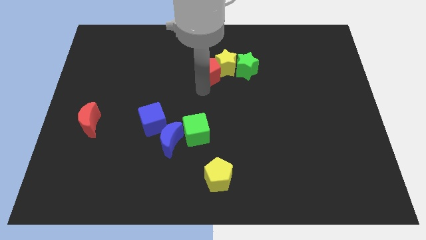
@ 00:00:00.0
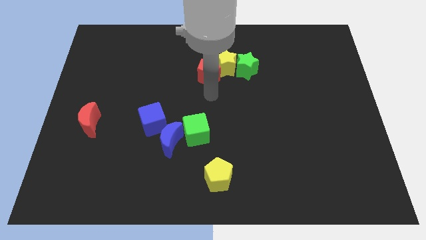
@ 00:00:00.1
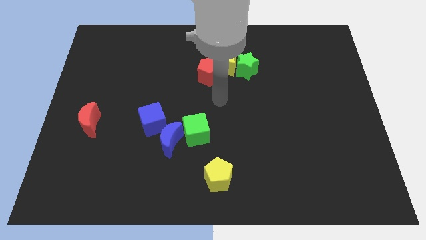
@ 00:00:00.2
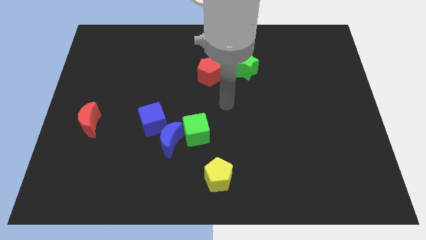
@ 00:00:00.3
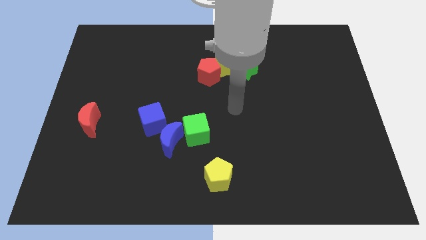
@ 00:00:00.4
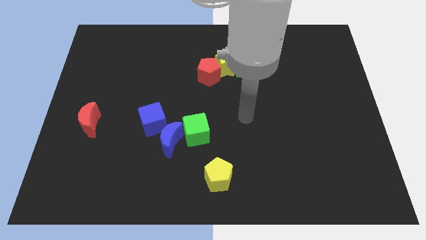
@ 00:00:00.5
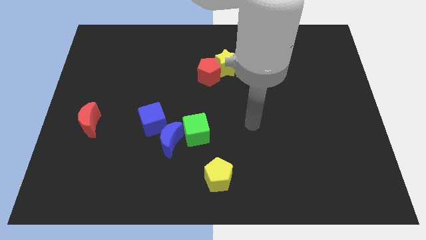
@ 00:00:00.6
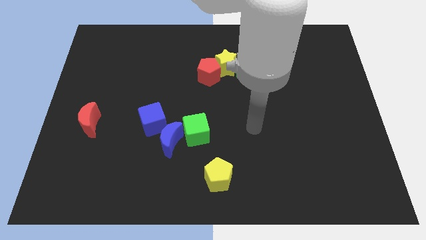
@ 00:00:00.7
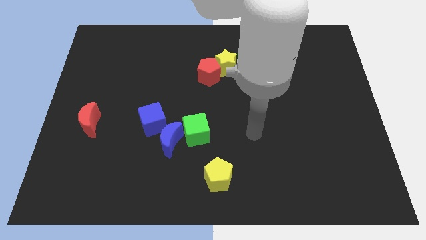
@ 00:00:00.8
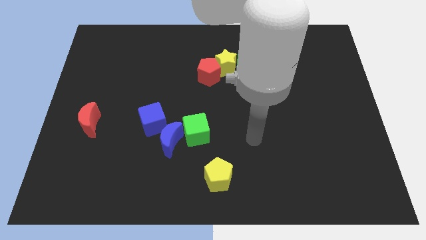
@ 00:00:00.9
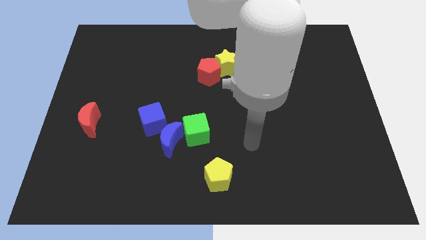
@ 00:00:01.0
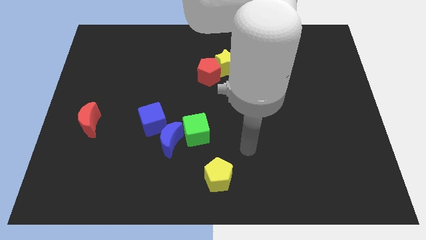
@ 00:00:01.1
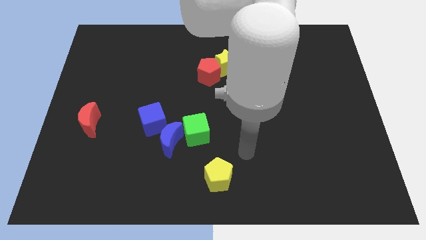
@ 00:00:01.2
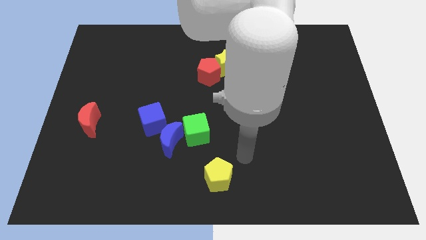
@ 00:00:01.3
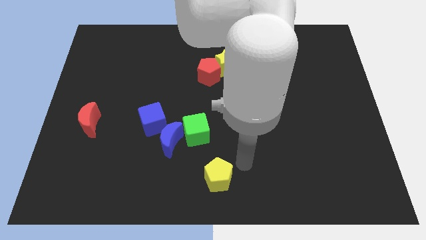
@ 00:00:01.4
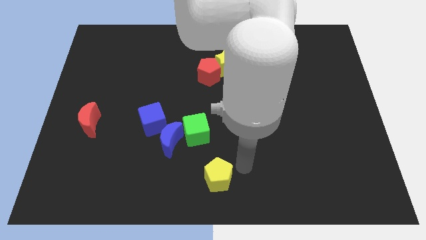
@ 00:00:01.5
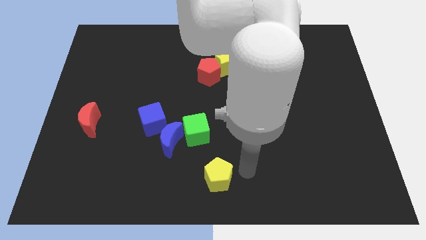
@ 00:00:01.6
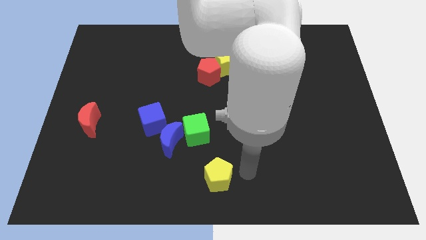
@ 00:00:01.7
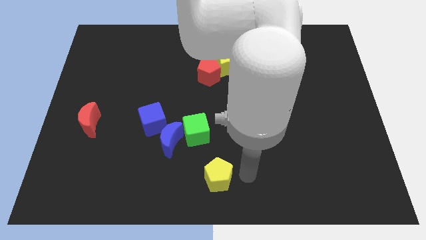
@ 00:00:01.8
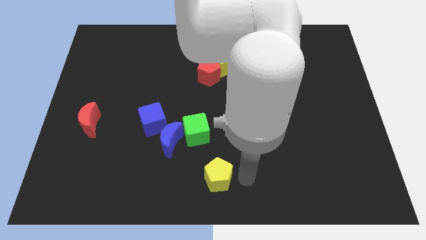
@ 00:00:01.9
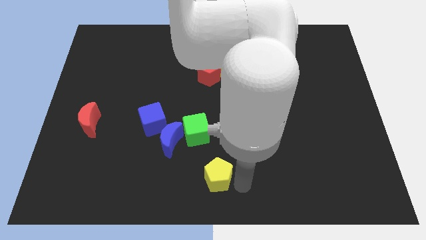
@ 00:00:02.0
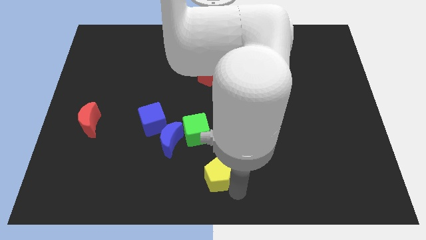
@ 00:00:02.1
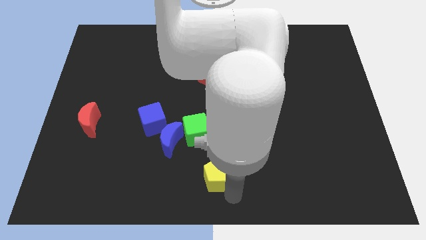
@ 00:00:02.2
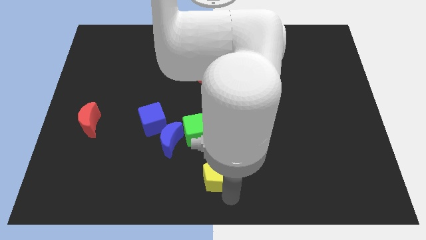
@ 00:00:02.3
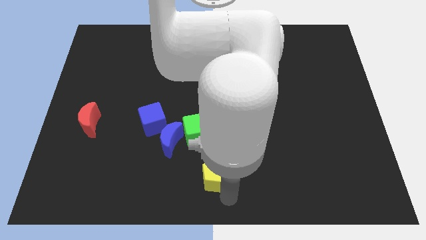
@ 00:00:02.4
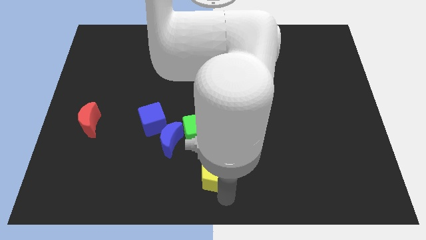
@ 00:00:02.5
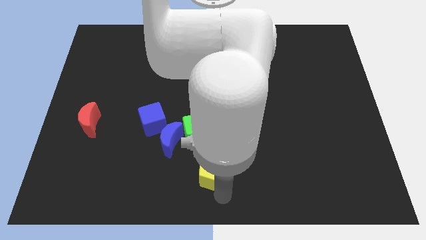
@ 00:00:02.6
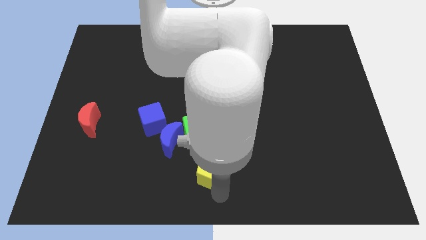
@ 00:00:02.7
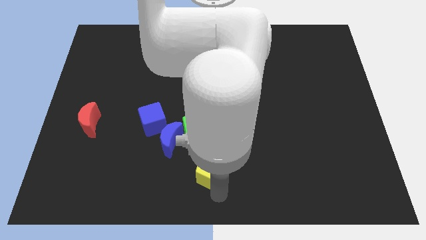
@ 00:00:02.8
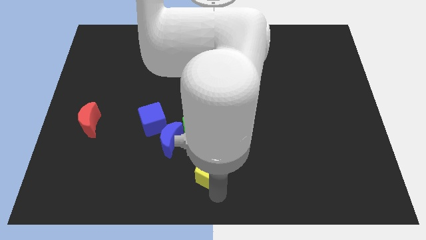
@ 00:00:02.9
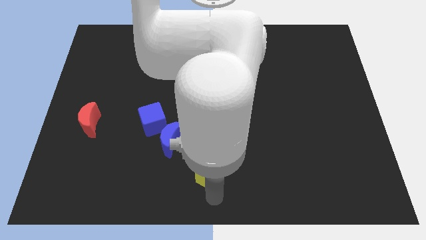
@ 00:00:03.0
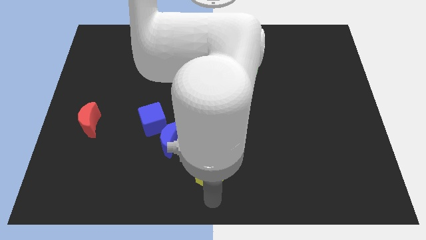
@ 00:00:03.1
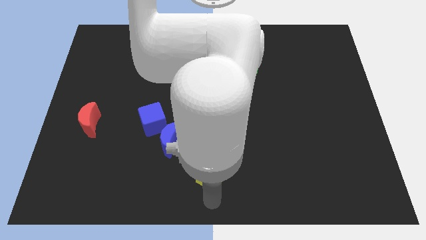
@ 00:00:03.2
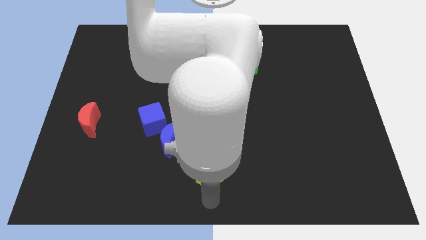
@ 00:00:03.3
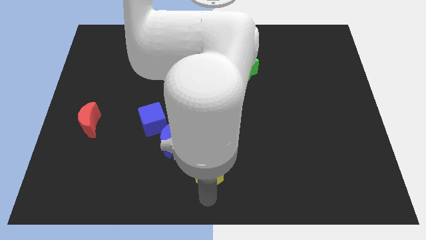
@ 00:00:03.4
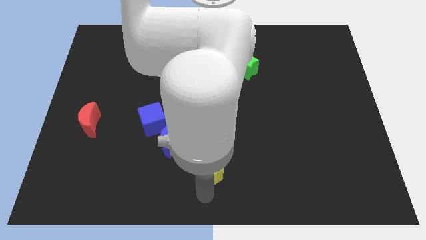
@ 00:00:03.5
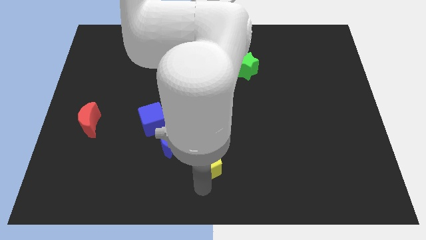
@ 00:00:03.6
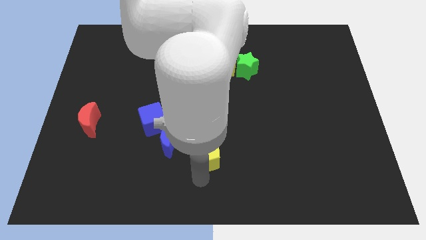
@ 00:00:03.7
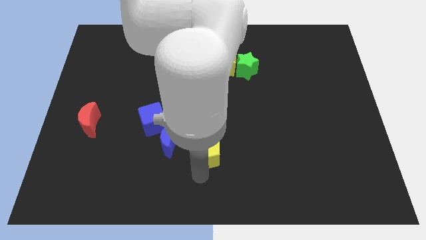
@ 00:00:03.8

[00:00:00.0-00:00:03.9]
push the yellow pentagon towards the green cube

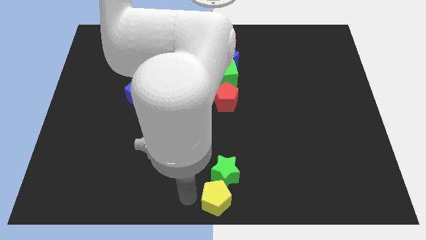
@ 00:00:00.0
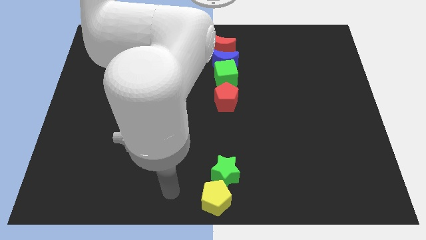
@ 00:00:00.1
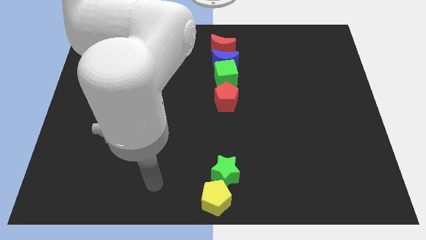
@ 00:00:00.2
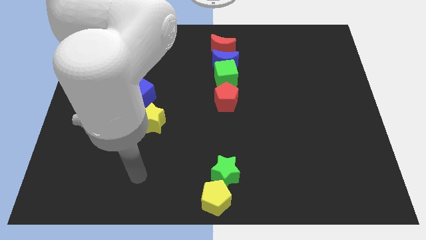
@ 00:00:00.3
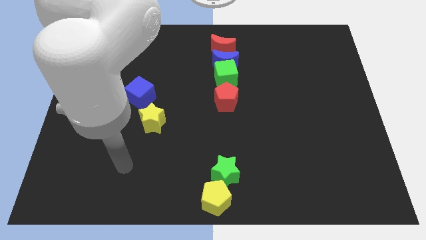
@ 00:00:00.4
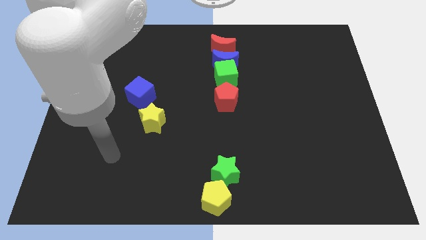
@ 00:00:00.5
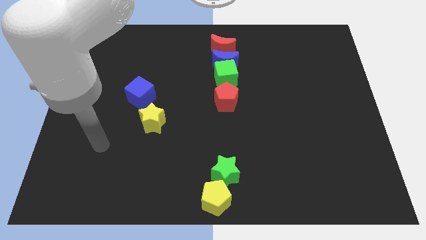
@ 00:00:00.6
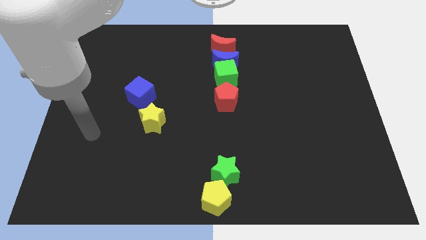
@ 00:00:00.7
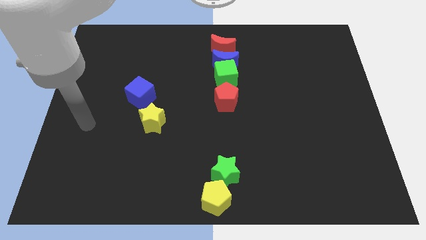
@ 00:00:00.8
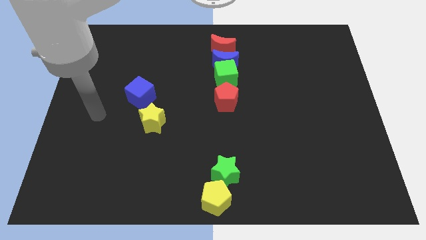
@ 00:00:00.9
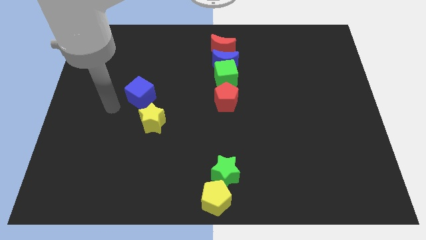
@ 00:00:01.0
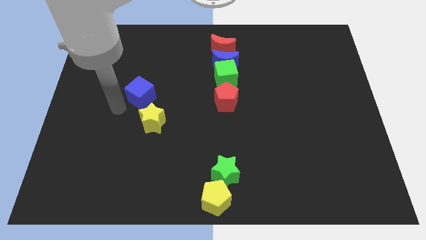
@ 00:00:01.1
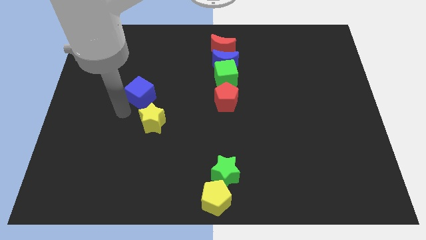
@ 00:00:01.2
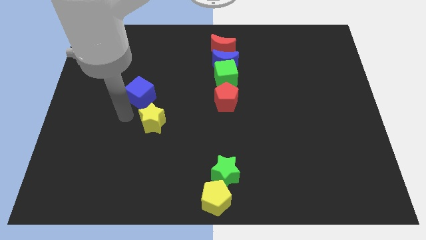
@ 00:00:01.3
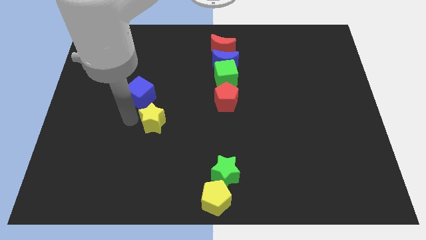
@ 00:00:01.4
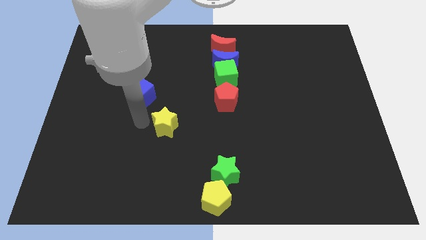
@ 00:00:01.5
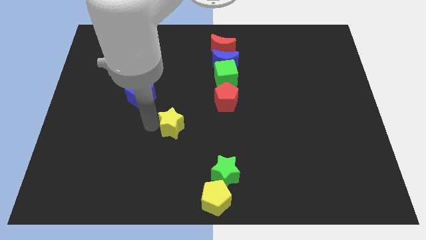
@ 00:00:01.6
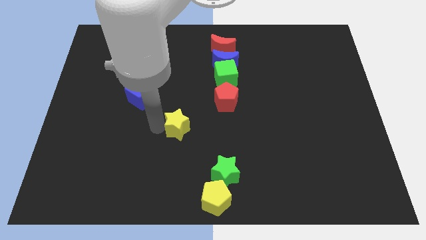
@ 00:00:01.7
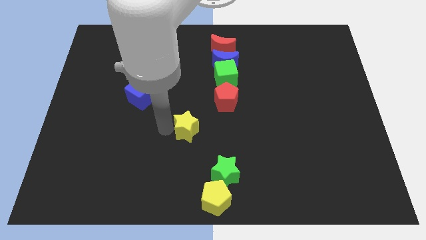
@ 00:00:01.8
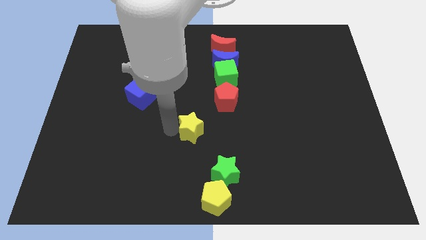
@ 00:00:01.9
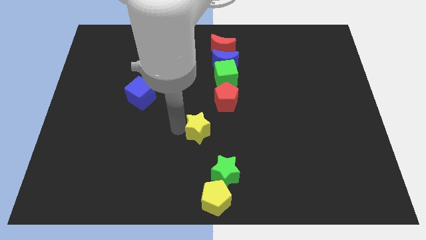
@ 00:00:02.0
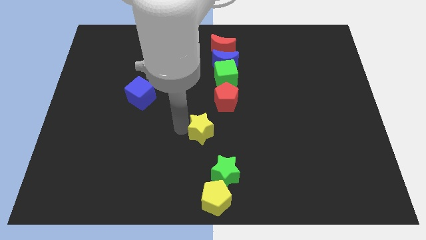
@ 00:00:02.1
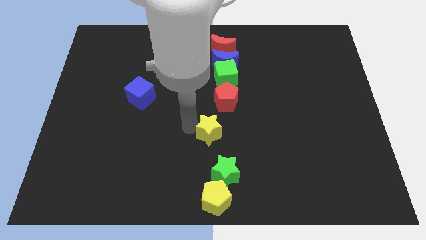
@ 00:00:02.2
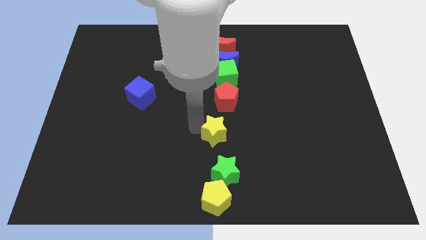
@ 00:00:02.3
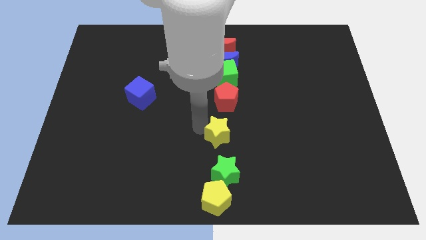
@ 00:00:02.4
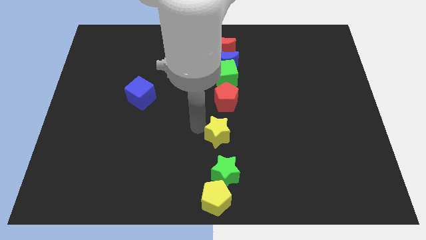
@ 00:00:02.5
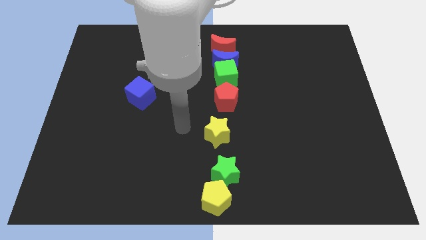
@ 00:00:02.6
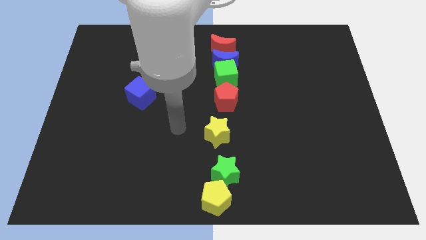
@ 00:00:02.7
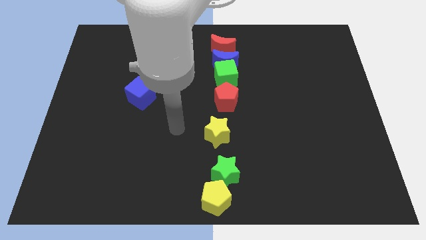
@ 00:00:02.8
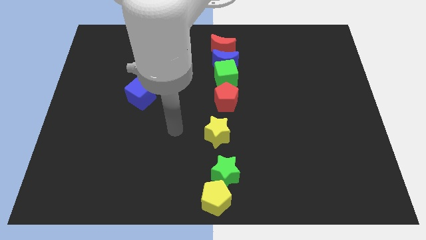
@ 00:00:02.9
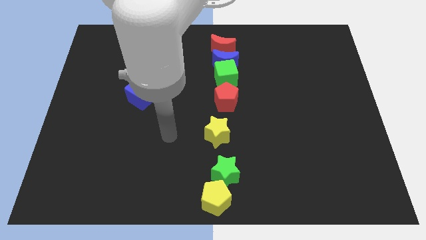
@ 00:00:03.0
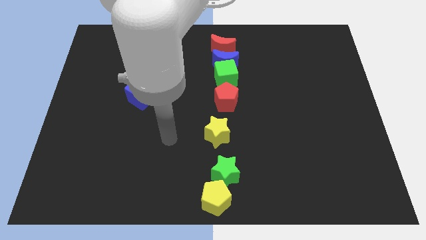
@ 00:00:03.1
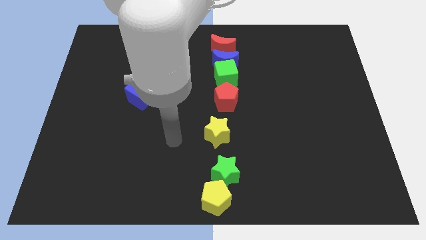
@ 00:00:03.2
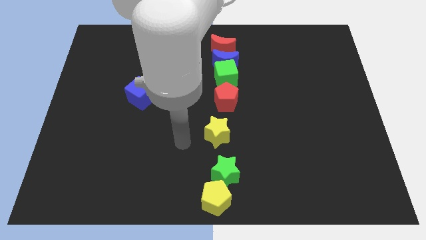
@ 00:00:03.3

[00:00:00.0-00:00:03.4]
separate the yellow star from the blue cube

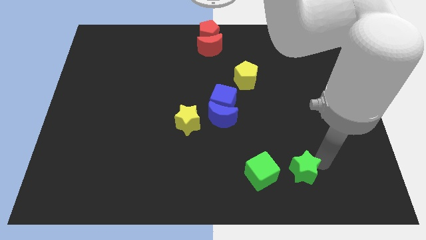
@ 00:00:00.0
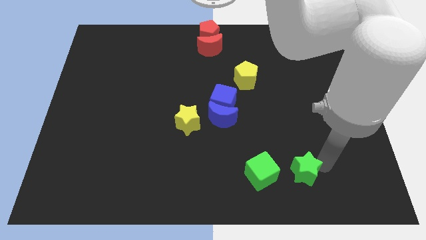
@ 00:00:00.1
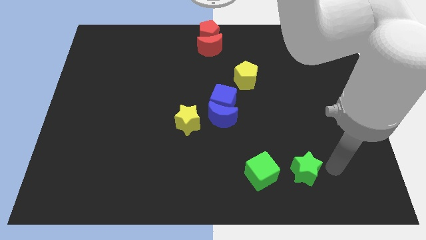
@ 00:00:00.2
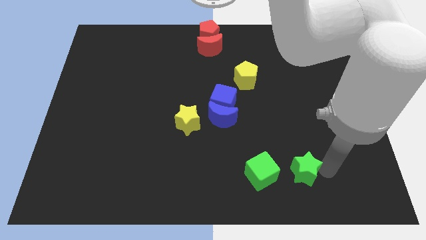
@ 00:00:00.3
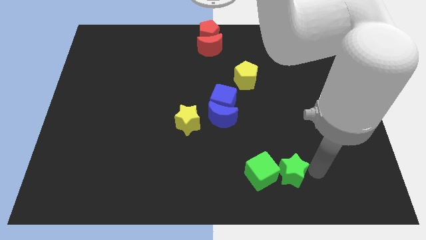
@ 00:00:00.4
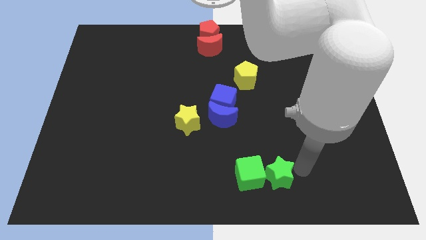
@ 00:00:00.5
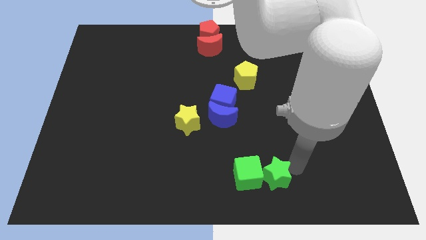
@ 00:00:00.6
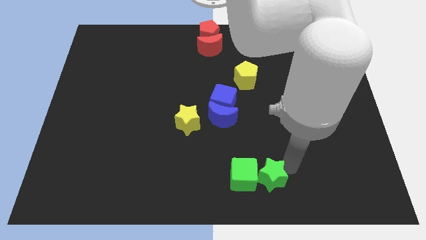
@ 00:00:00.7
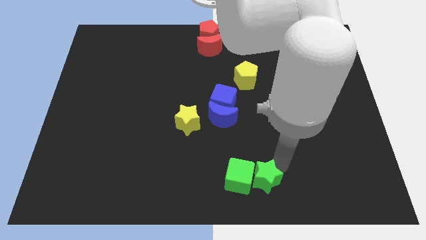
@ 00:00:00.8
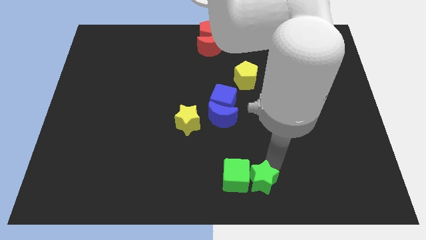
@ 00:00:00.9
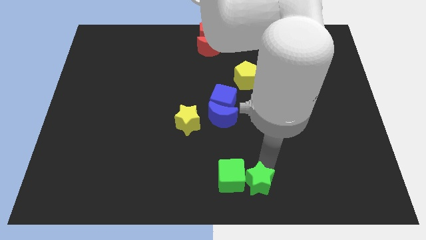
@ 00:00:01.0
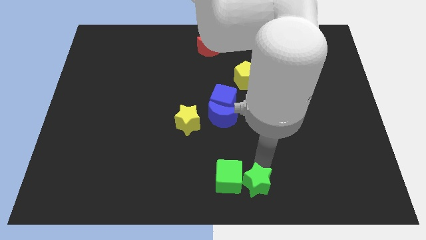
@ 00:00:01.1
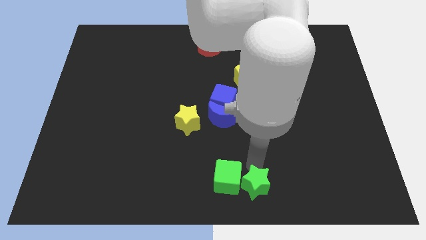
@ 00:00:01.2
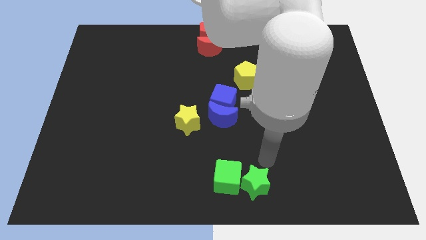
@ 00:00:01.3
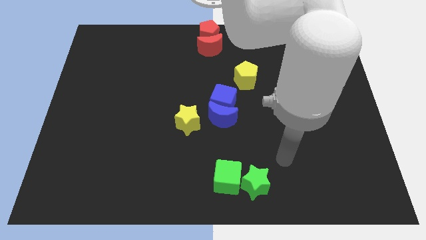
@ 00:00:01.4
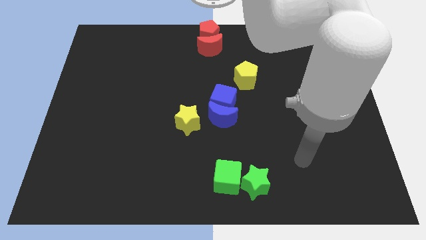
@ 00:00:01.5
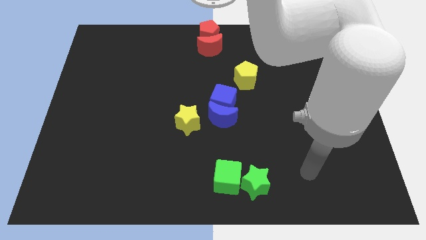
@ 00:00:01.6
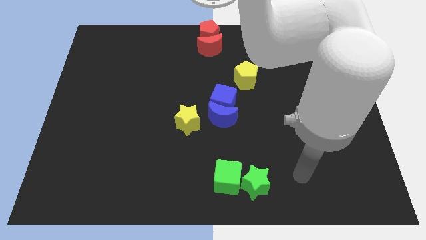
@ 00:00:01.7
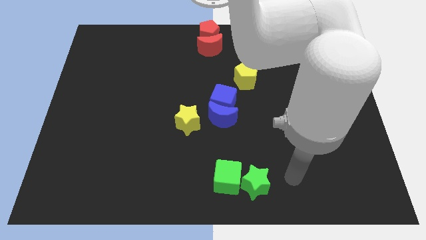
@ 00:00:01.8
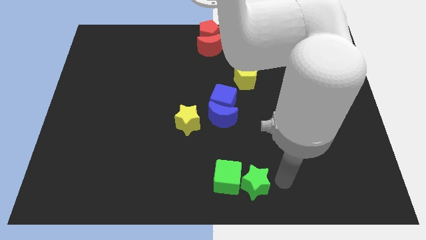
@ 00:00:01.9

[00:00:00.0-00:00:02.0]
push the green star into the green cube
